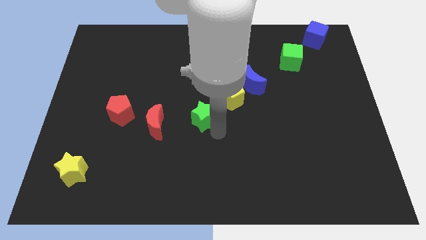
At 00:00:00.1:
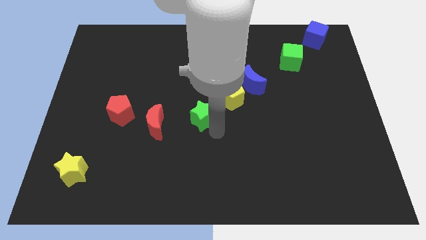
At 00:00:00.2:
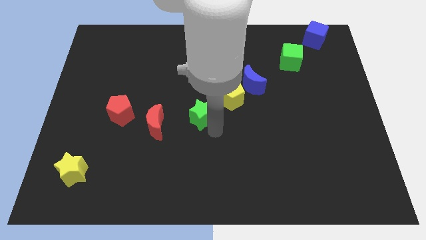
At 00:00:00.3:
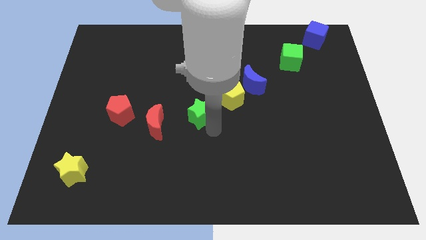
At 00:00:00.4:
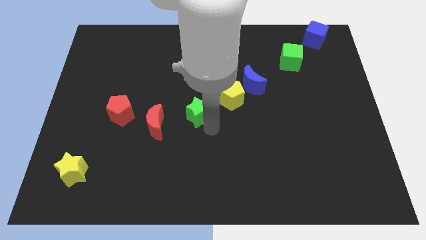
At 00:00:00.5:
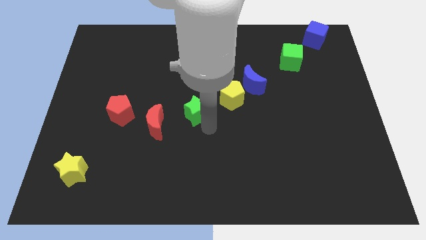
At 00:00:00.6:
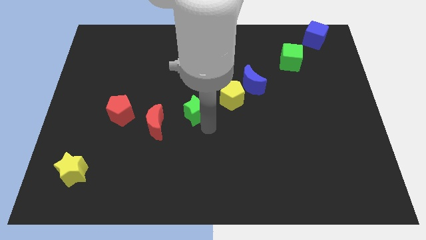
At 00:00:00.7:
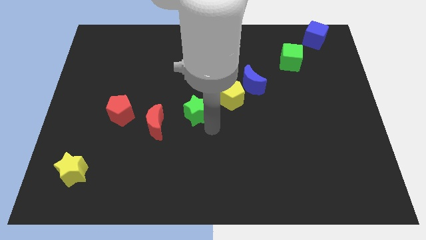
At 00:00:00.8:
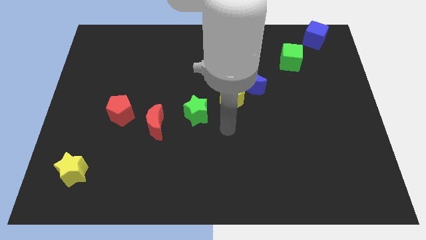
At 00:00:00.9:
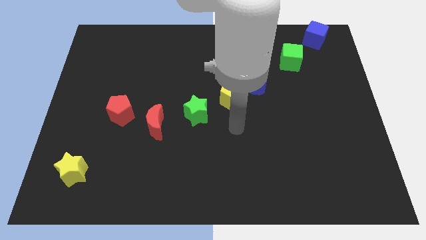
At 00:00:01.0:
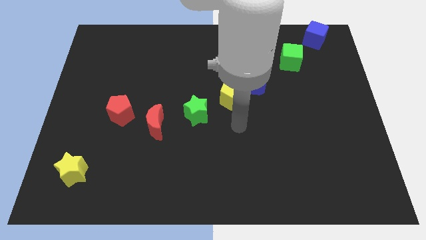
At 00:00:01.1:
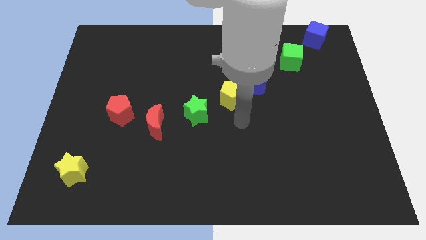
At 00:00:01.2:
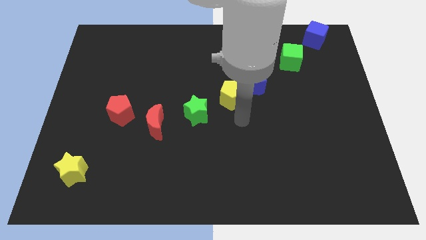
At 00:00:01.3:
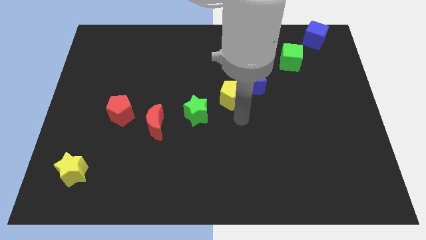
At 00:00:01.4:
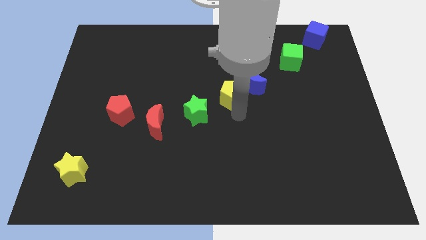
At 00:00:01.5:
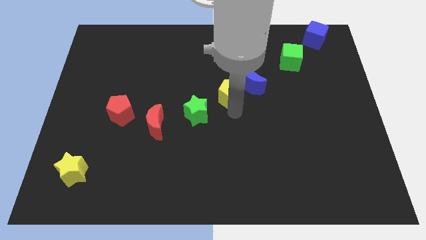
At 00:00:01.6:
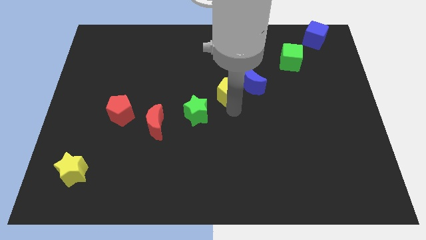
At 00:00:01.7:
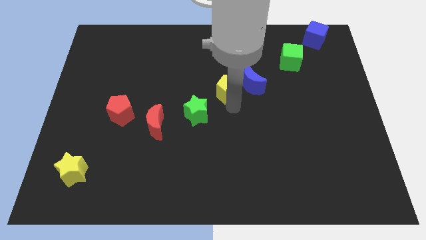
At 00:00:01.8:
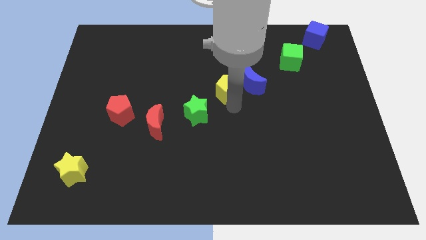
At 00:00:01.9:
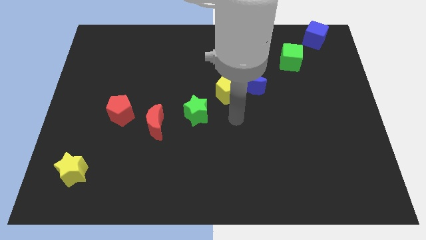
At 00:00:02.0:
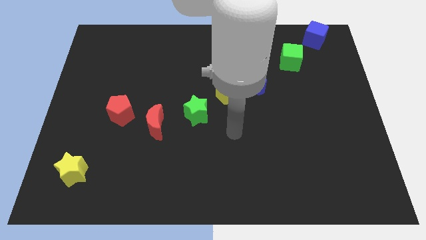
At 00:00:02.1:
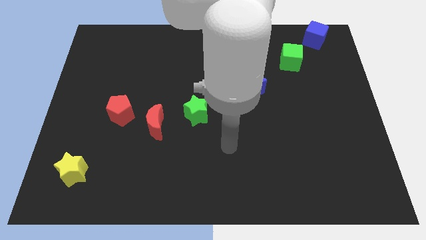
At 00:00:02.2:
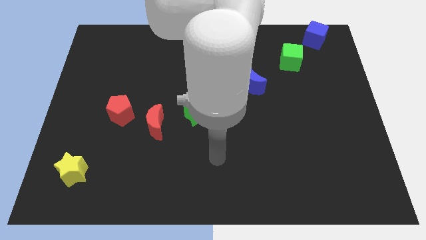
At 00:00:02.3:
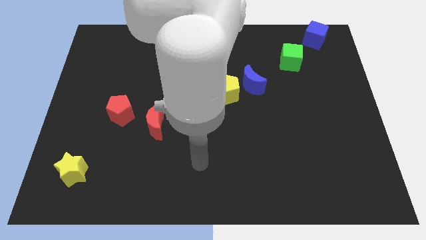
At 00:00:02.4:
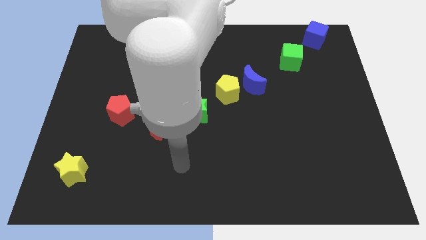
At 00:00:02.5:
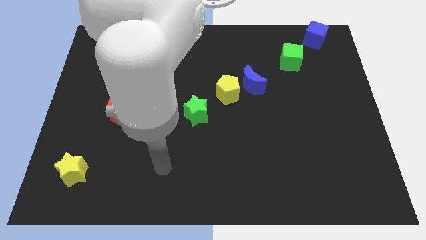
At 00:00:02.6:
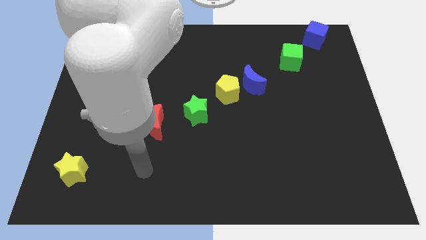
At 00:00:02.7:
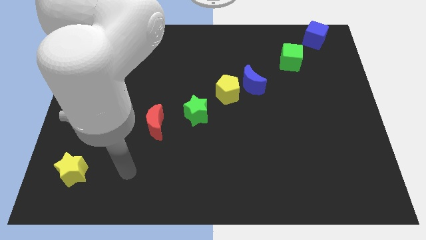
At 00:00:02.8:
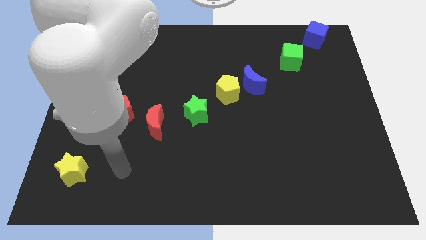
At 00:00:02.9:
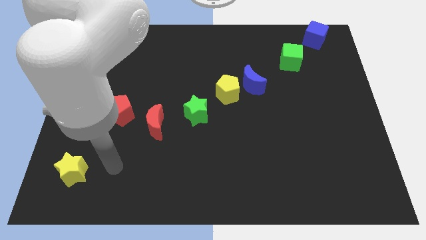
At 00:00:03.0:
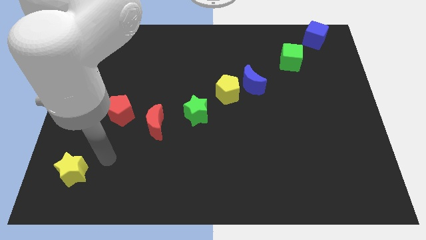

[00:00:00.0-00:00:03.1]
push the green star and yellow pentagon between red and blue moons

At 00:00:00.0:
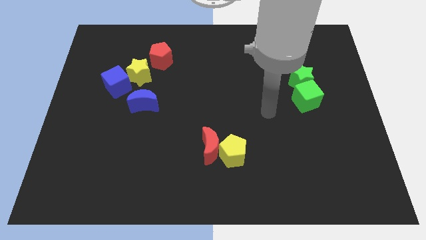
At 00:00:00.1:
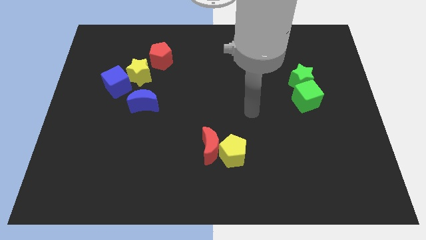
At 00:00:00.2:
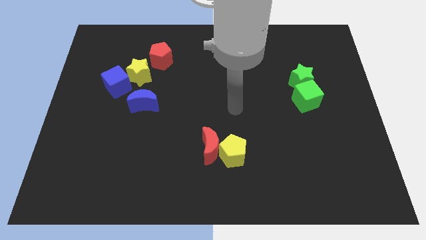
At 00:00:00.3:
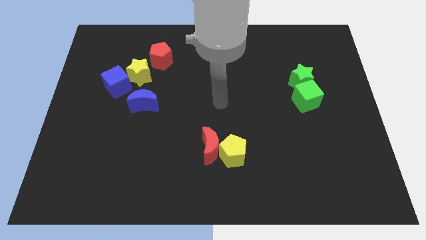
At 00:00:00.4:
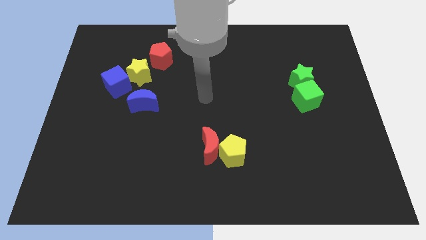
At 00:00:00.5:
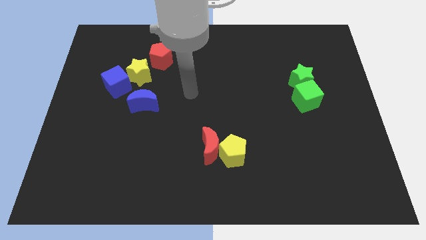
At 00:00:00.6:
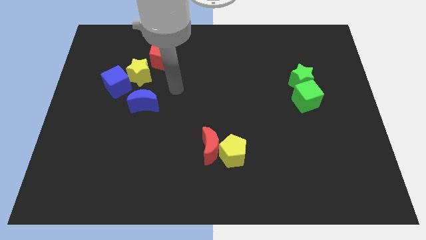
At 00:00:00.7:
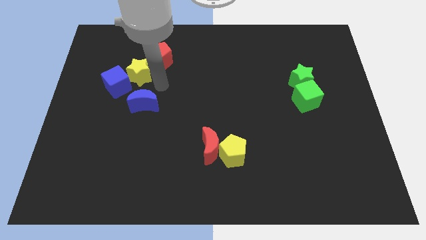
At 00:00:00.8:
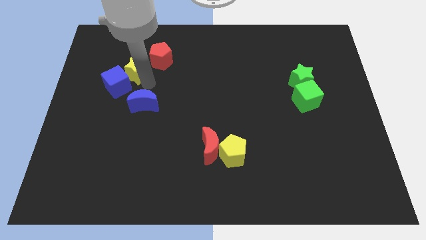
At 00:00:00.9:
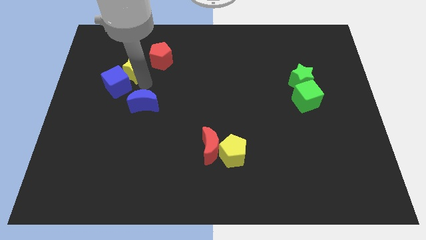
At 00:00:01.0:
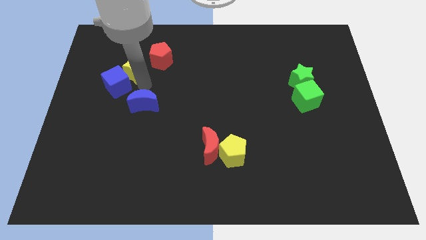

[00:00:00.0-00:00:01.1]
tap the yellow star

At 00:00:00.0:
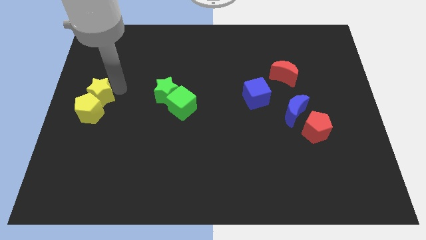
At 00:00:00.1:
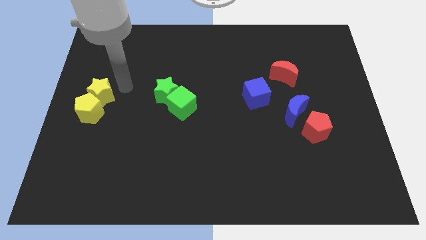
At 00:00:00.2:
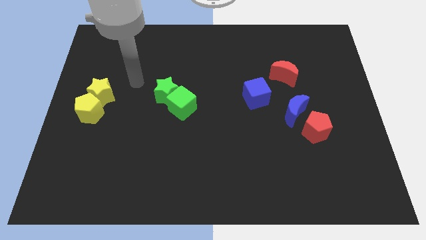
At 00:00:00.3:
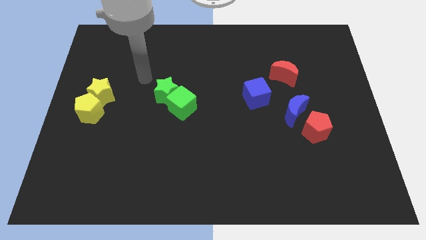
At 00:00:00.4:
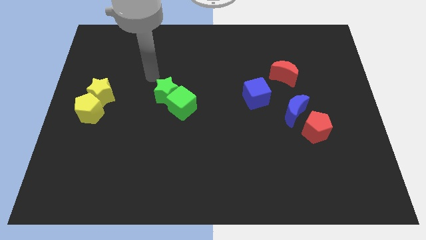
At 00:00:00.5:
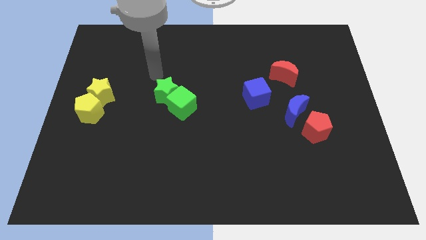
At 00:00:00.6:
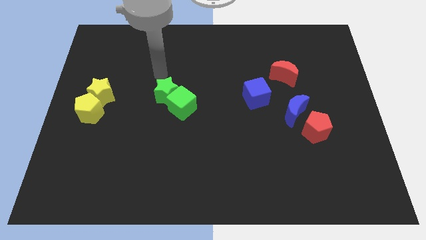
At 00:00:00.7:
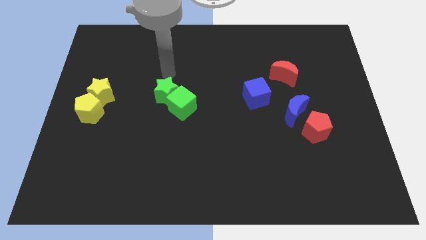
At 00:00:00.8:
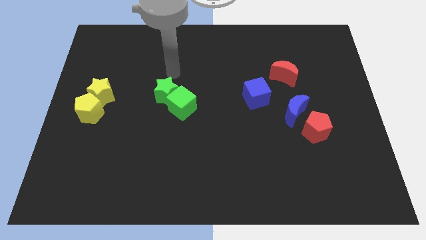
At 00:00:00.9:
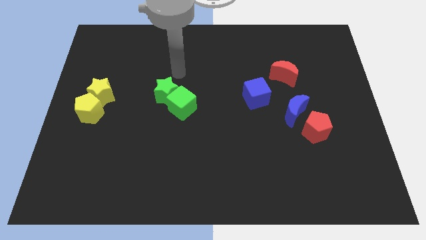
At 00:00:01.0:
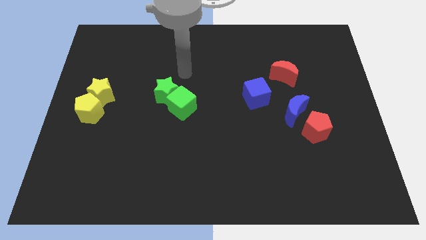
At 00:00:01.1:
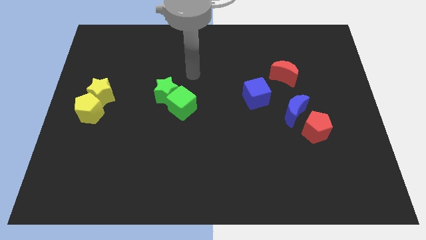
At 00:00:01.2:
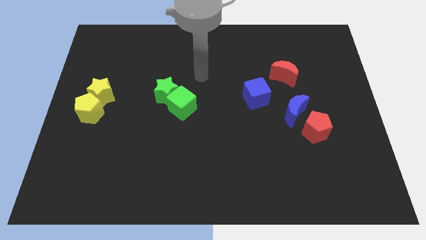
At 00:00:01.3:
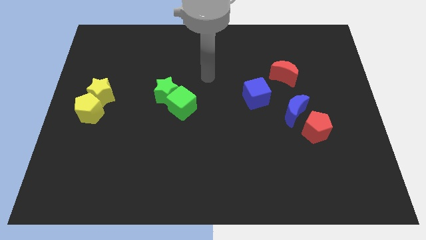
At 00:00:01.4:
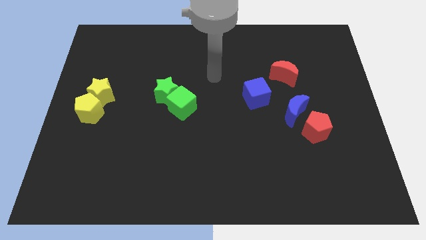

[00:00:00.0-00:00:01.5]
move arm towards the center of the board

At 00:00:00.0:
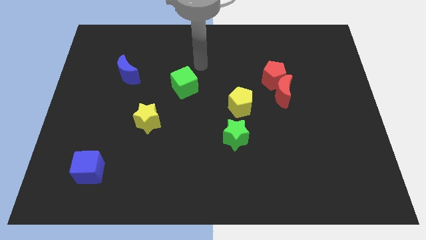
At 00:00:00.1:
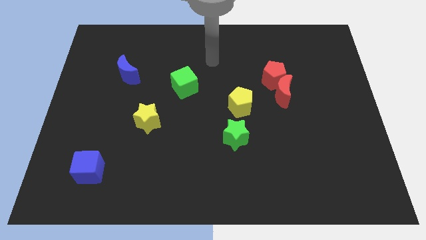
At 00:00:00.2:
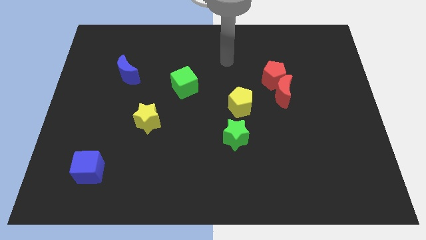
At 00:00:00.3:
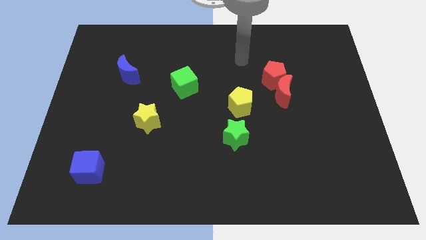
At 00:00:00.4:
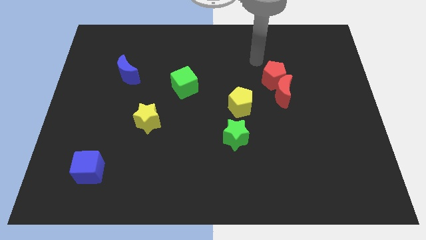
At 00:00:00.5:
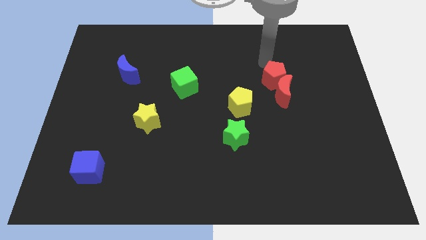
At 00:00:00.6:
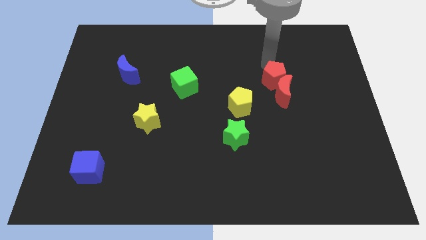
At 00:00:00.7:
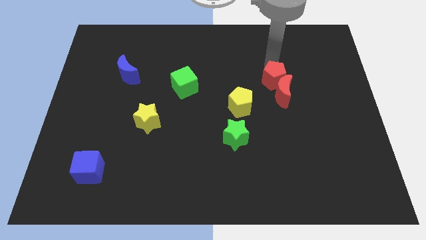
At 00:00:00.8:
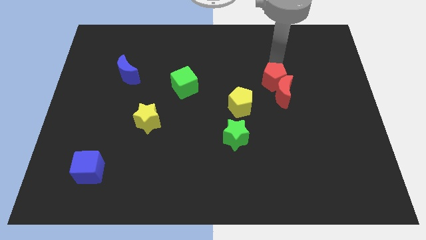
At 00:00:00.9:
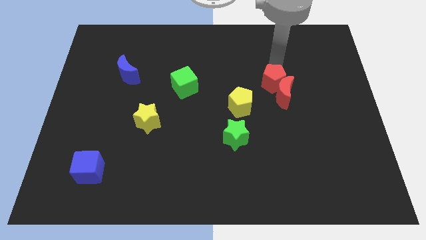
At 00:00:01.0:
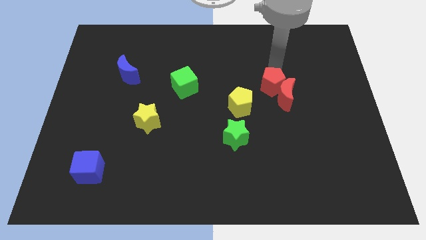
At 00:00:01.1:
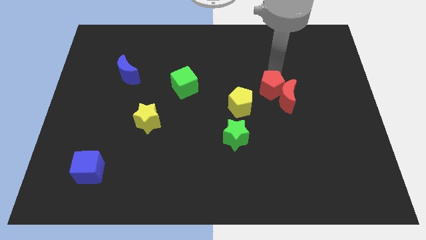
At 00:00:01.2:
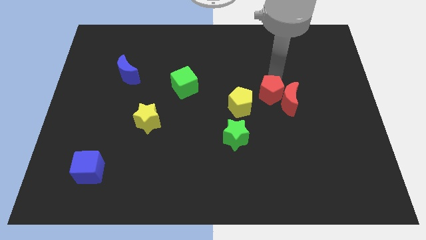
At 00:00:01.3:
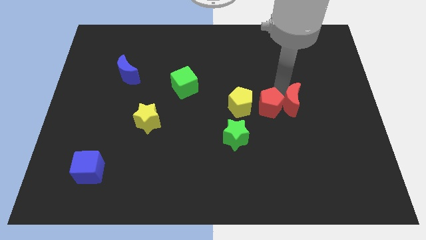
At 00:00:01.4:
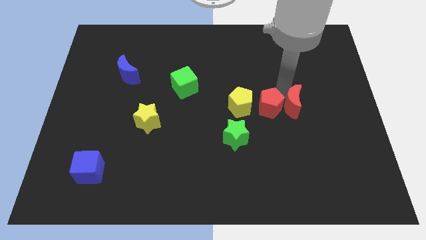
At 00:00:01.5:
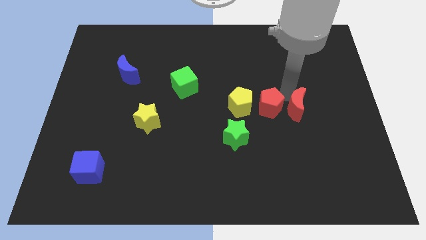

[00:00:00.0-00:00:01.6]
separate the red pentagon and the red moon

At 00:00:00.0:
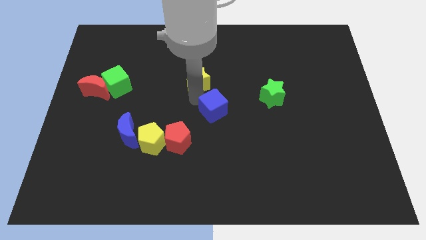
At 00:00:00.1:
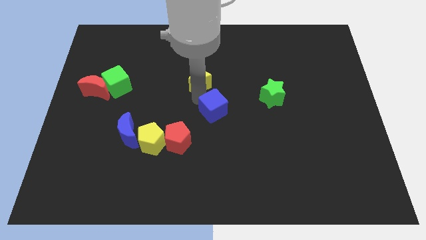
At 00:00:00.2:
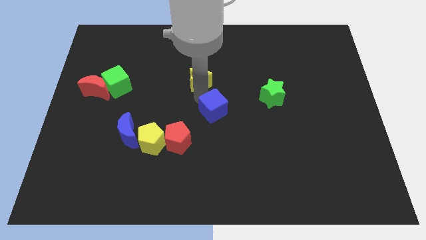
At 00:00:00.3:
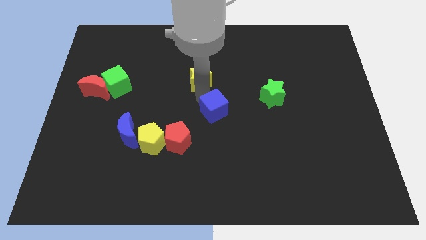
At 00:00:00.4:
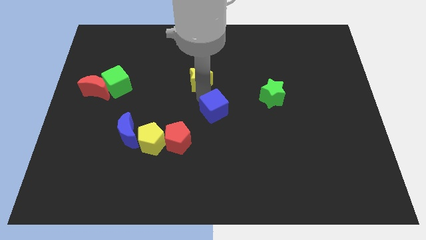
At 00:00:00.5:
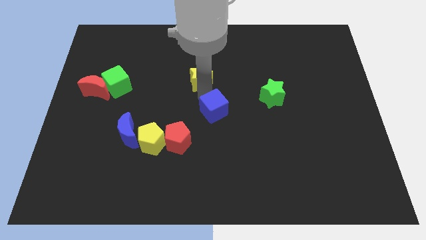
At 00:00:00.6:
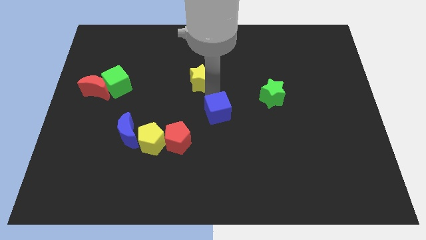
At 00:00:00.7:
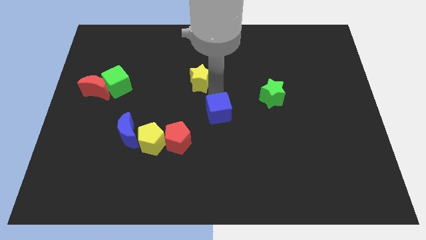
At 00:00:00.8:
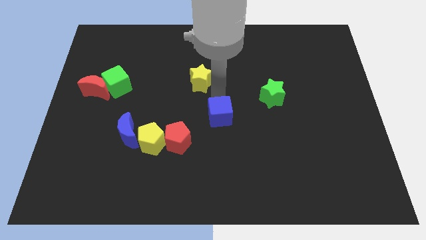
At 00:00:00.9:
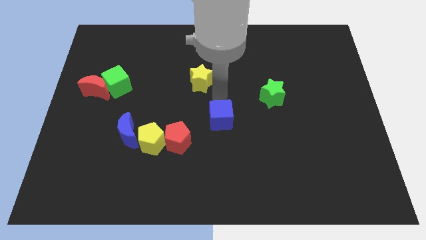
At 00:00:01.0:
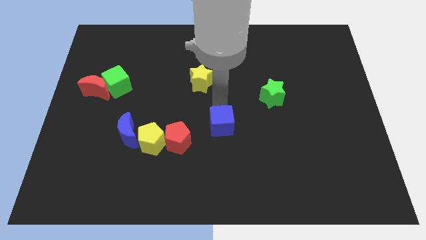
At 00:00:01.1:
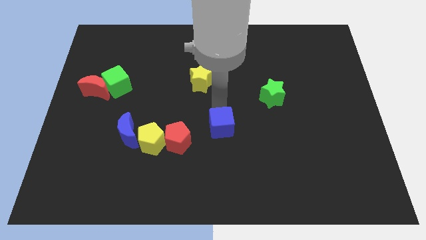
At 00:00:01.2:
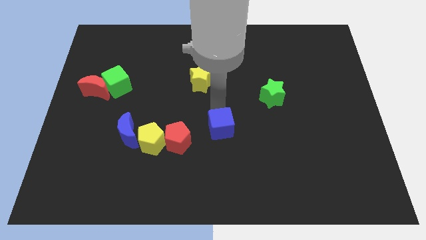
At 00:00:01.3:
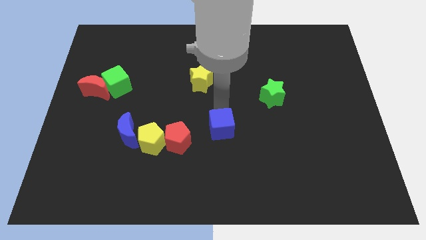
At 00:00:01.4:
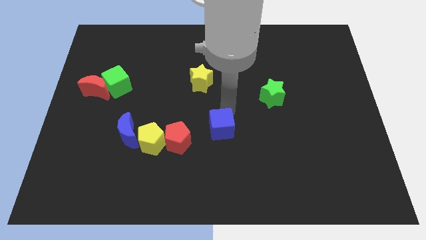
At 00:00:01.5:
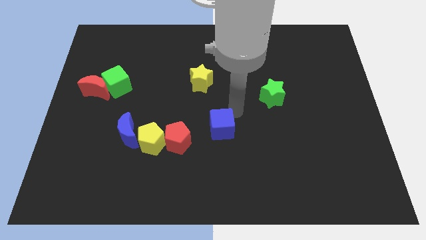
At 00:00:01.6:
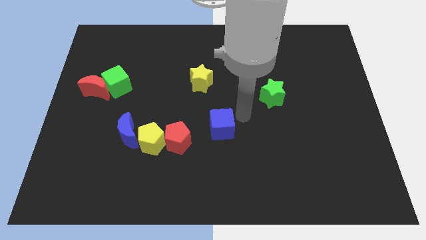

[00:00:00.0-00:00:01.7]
move the blue cube towards the bottom center of the board
